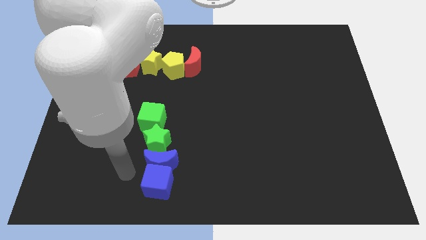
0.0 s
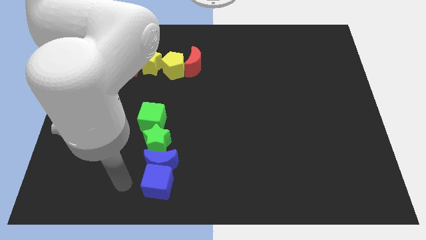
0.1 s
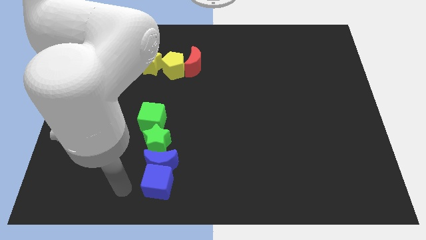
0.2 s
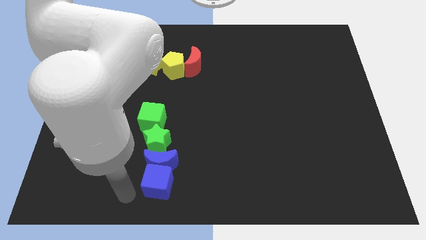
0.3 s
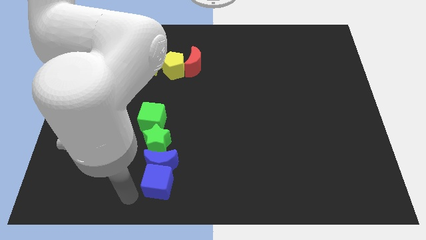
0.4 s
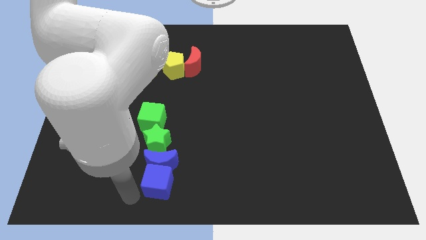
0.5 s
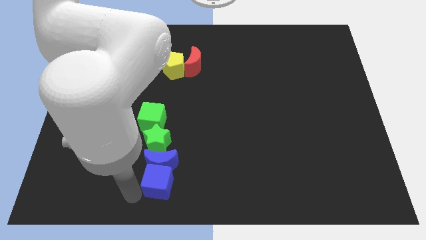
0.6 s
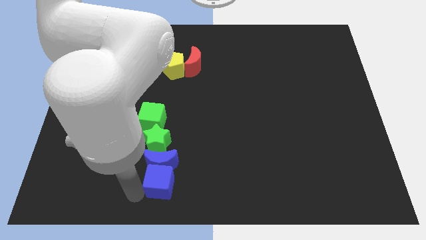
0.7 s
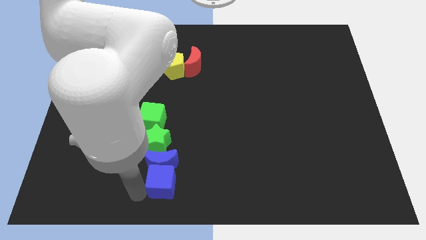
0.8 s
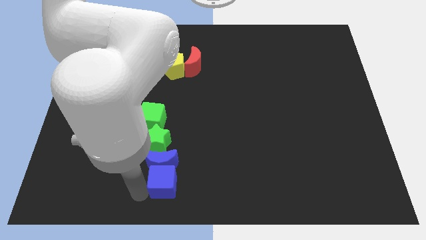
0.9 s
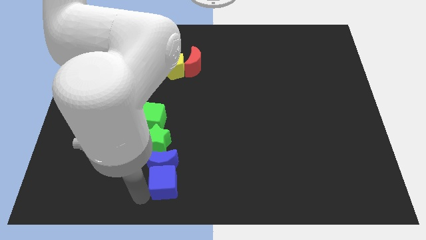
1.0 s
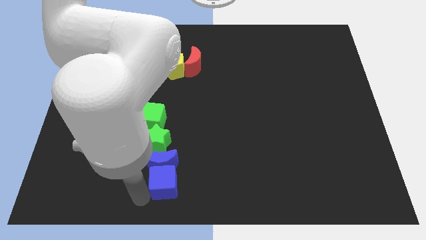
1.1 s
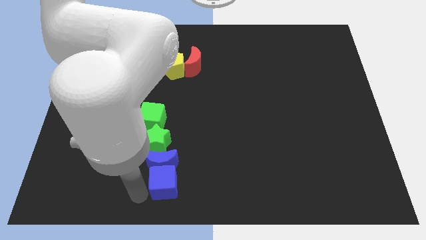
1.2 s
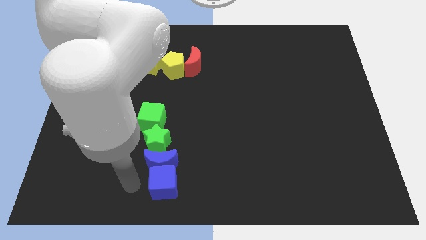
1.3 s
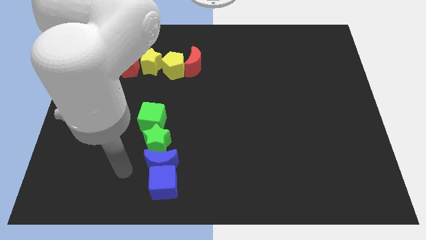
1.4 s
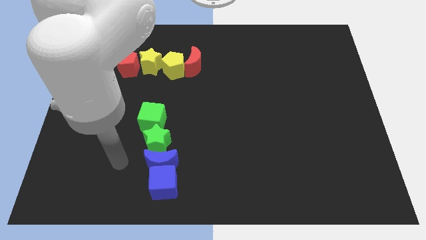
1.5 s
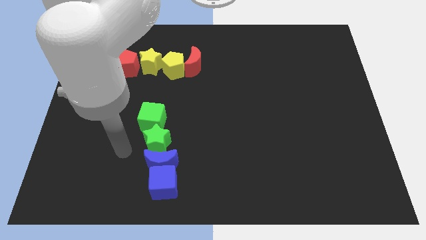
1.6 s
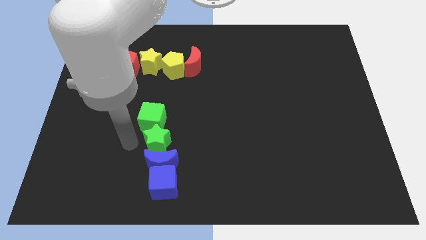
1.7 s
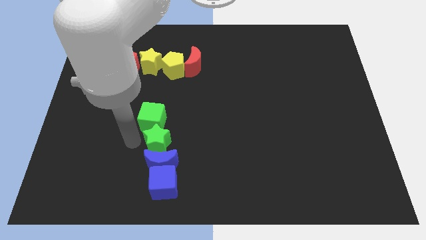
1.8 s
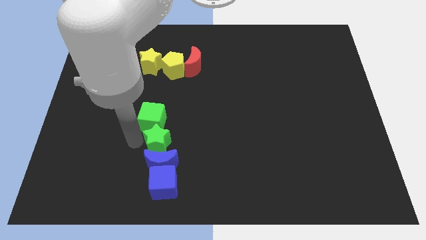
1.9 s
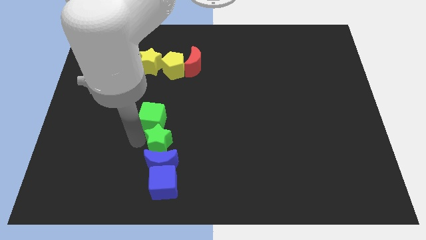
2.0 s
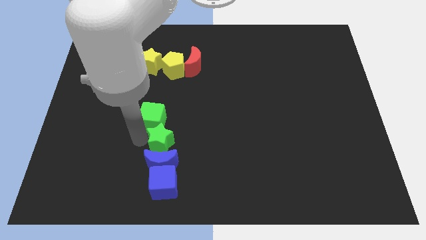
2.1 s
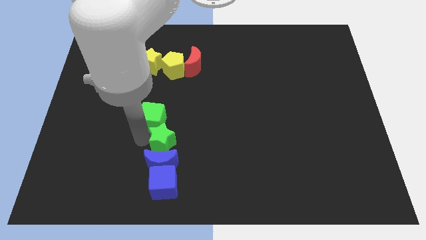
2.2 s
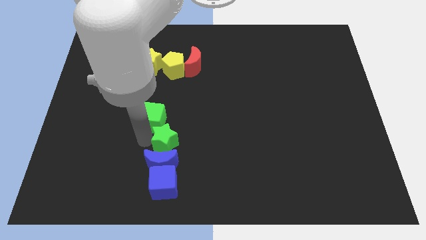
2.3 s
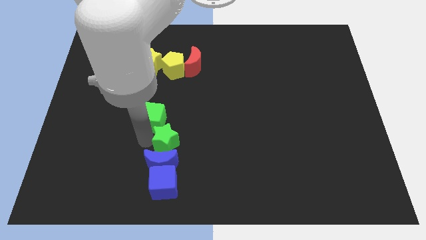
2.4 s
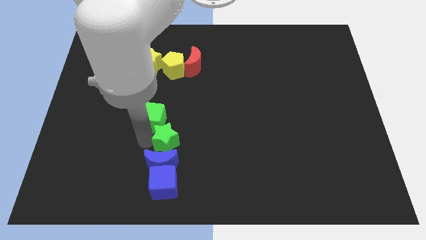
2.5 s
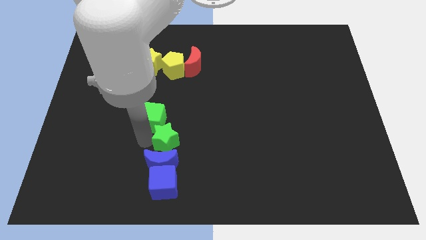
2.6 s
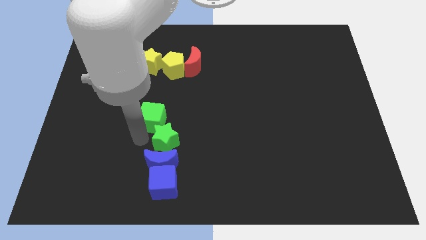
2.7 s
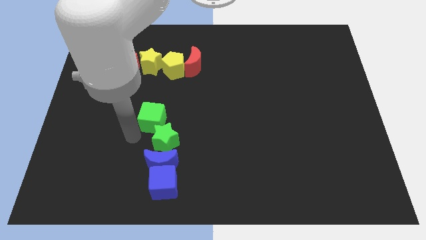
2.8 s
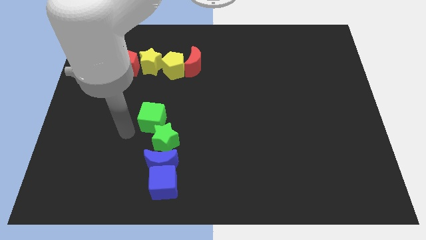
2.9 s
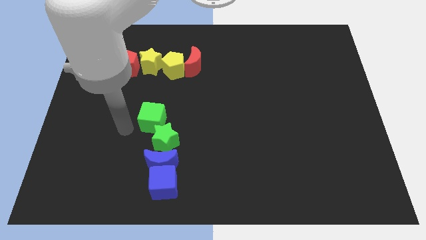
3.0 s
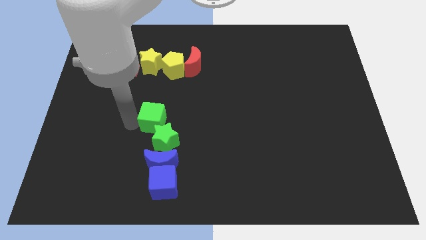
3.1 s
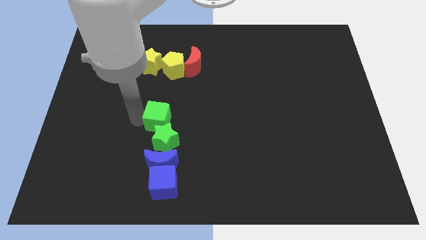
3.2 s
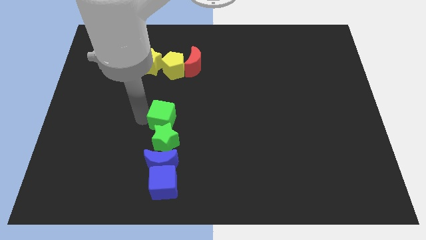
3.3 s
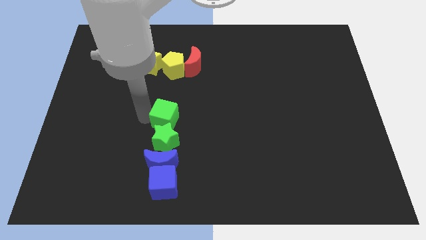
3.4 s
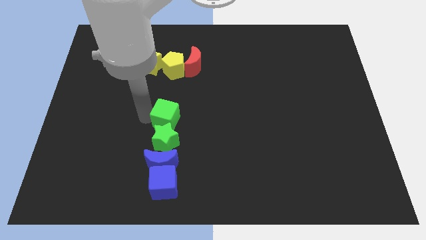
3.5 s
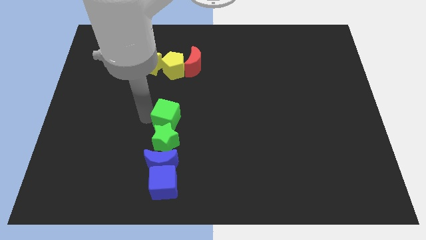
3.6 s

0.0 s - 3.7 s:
adjust the green blocks and green blocks to form a vertical line

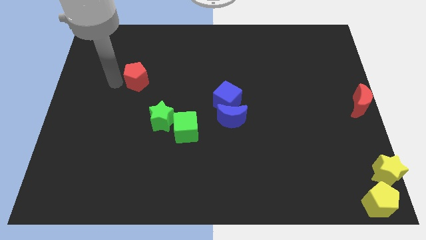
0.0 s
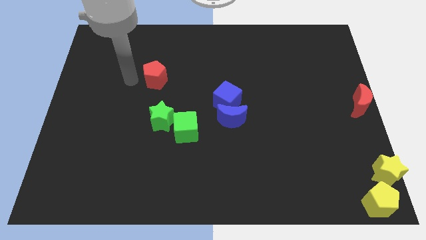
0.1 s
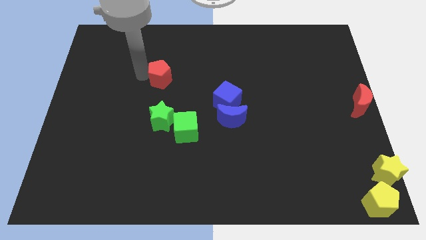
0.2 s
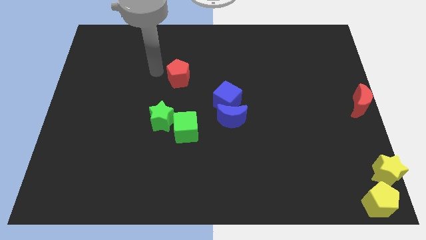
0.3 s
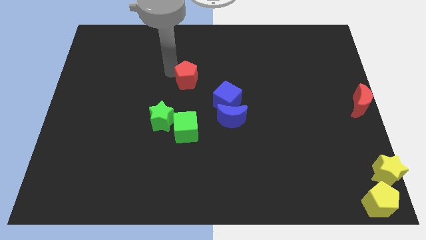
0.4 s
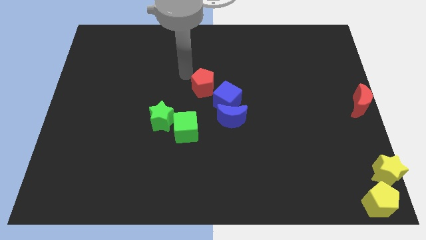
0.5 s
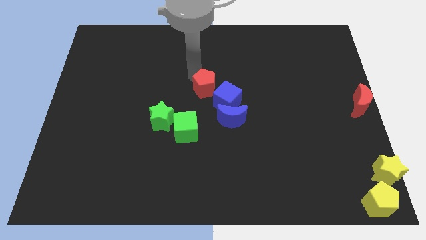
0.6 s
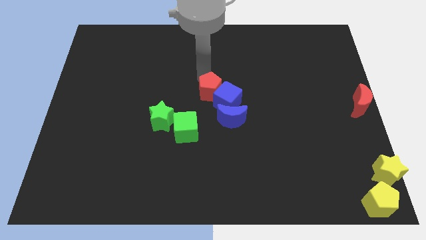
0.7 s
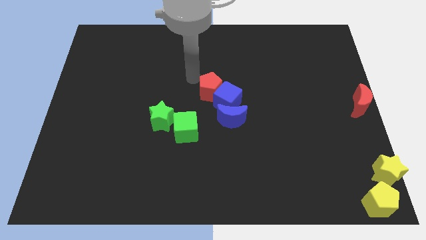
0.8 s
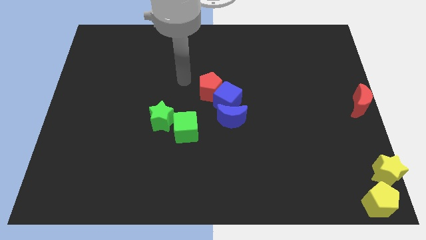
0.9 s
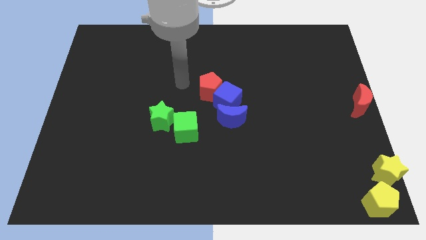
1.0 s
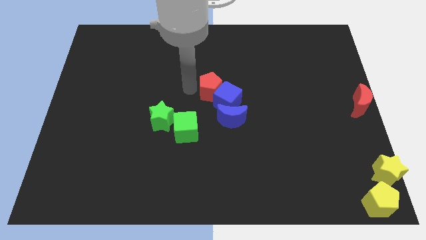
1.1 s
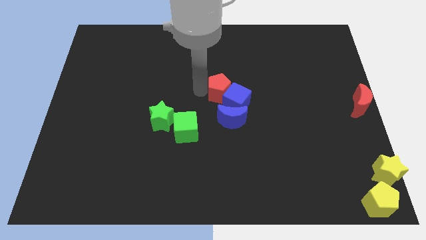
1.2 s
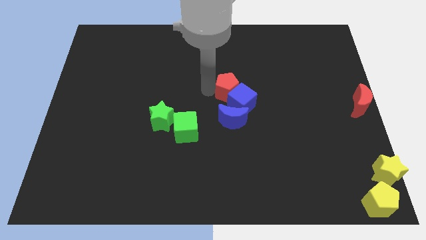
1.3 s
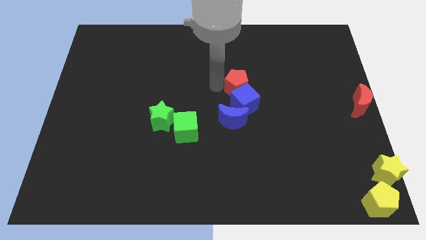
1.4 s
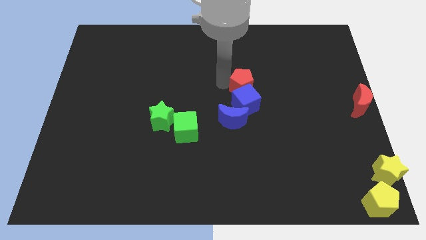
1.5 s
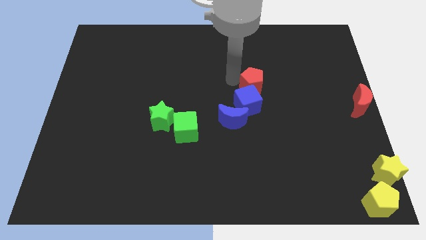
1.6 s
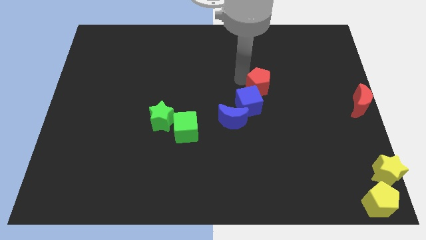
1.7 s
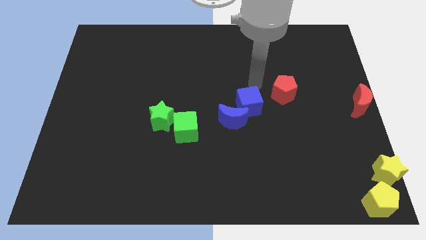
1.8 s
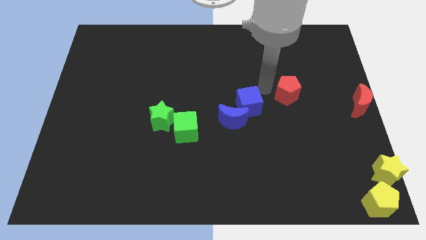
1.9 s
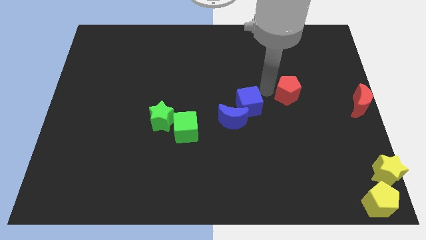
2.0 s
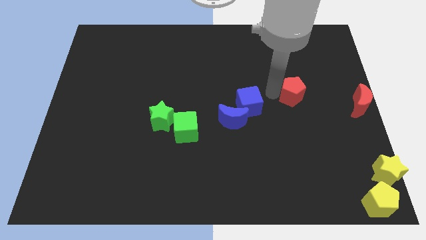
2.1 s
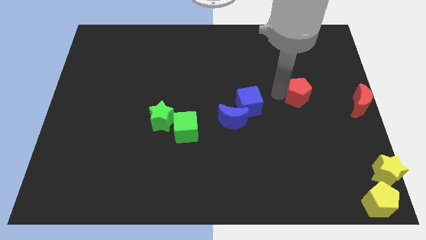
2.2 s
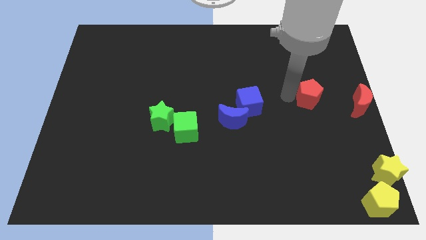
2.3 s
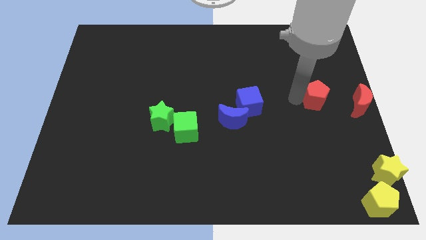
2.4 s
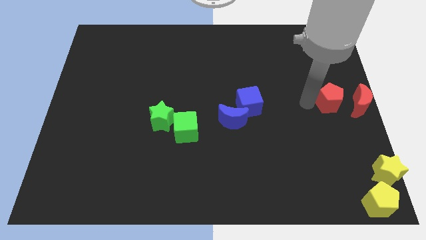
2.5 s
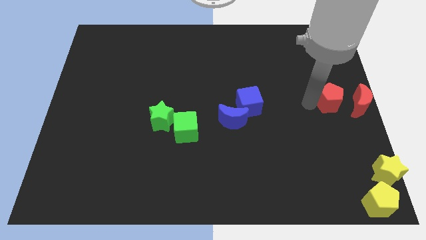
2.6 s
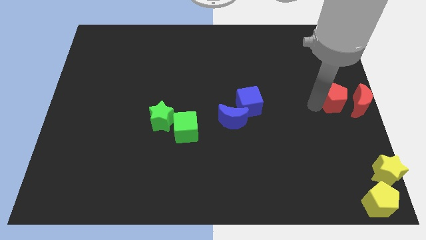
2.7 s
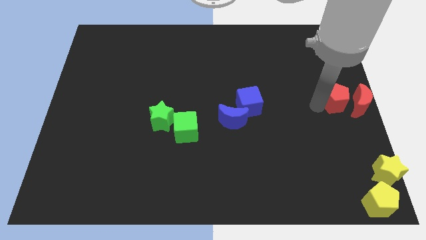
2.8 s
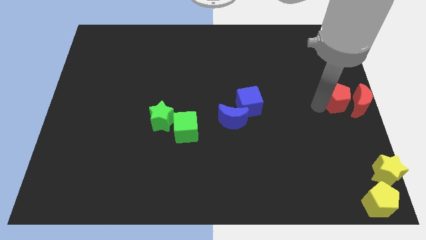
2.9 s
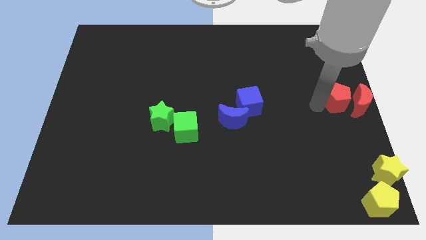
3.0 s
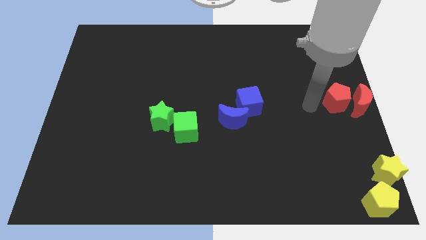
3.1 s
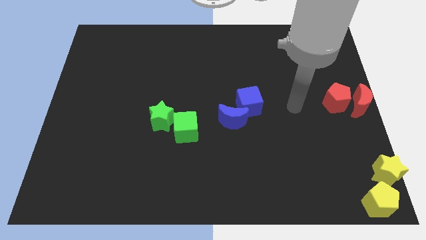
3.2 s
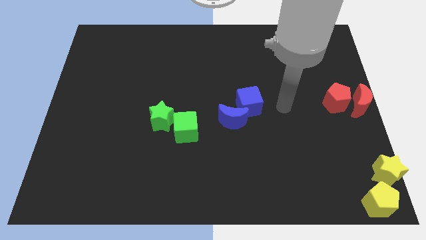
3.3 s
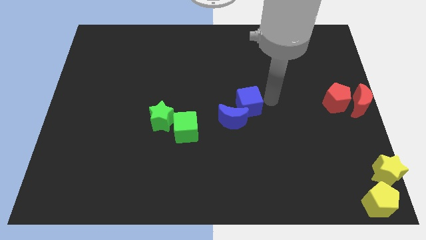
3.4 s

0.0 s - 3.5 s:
move the red pentagon to the left side of the red moon

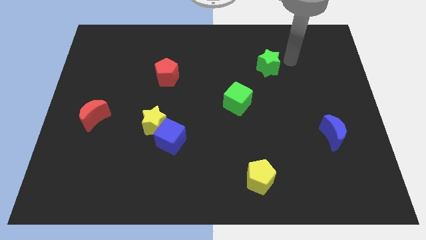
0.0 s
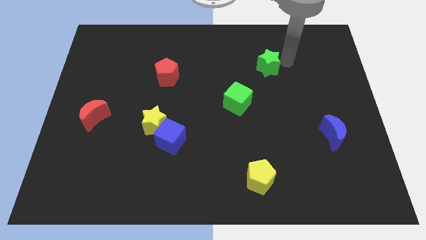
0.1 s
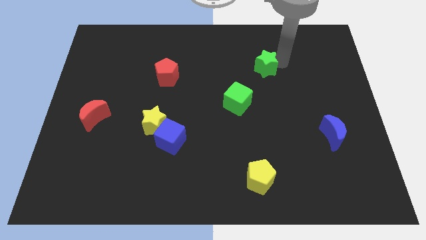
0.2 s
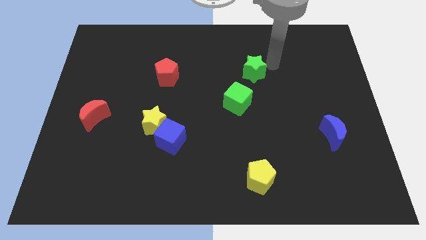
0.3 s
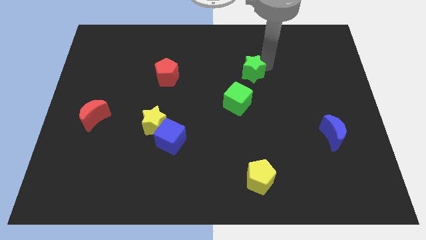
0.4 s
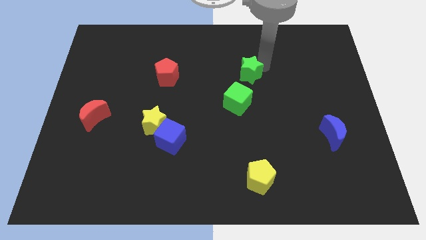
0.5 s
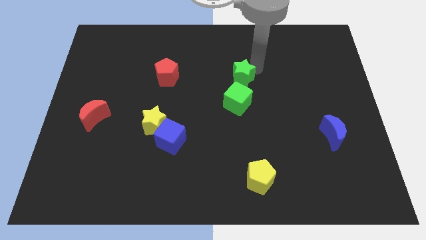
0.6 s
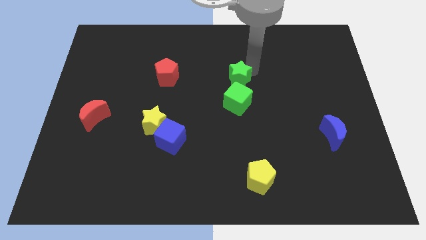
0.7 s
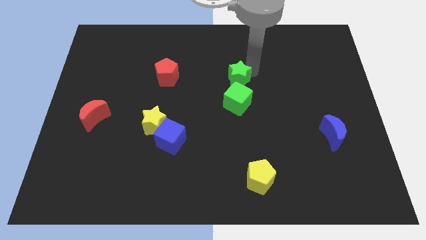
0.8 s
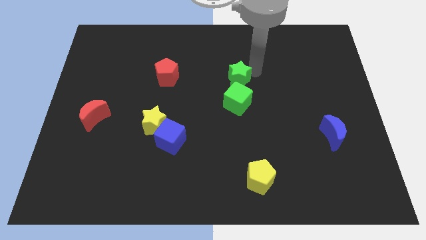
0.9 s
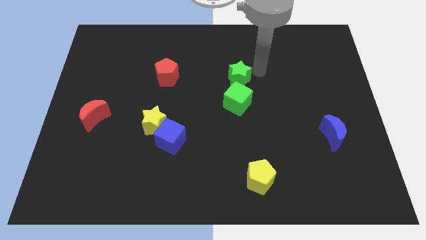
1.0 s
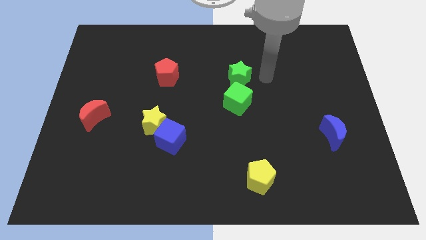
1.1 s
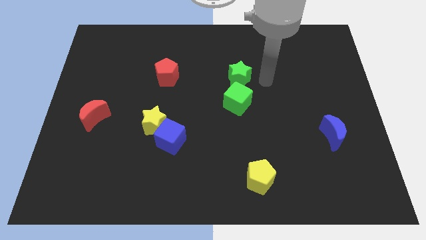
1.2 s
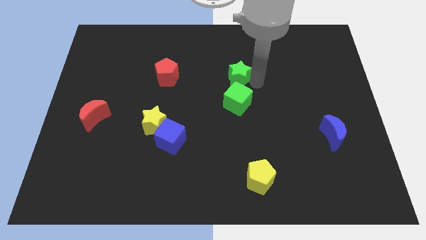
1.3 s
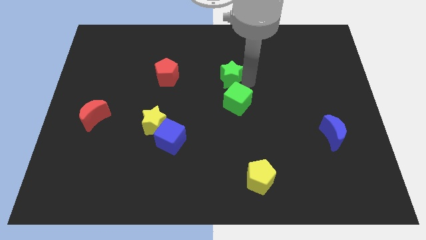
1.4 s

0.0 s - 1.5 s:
place the green star at the top side of the green cube

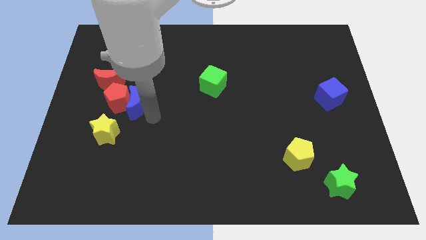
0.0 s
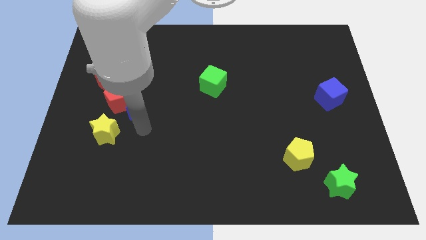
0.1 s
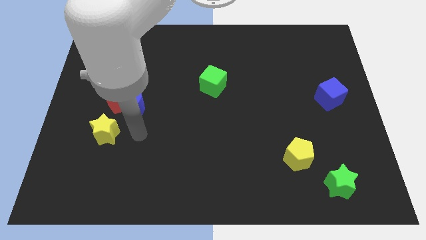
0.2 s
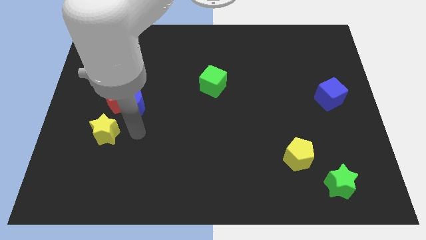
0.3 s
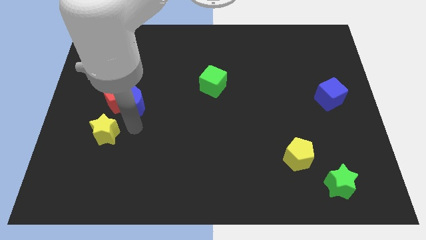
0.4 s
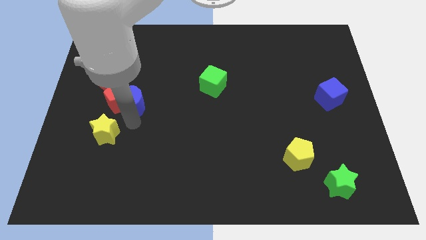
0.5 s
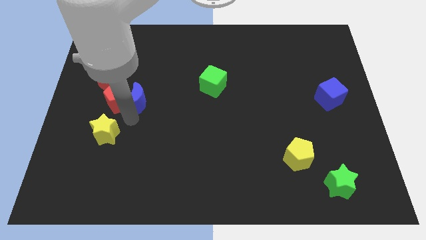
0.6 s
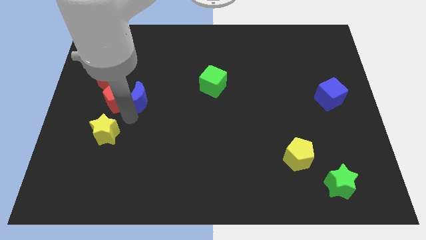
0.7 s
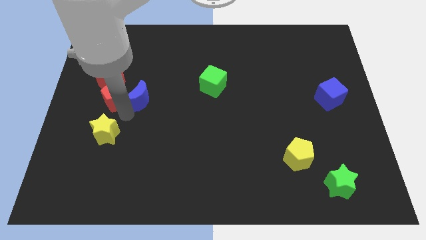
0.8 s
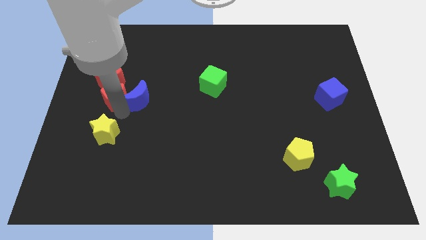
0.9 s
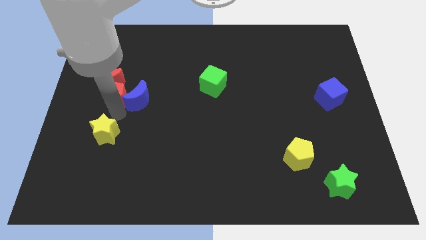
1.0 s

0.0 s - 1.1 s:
push the blue moon to the bottom left side the red pentagon
